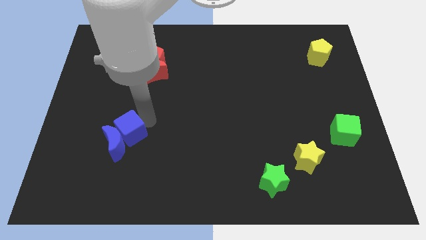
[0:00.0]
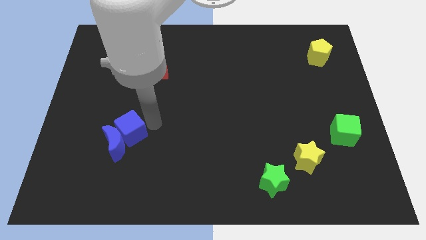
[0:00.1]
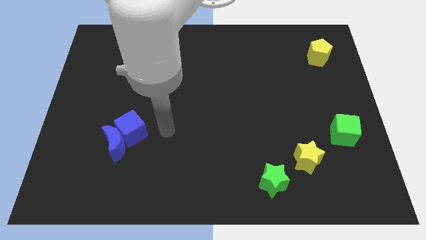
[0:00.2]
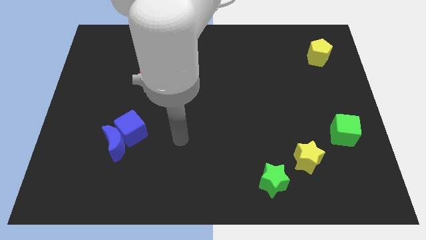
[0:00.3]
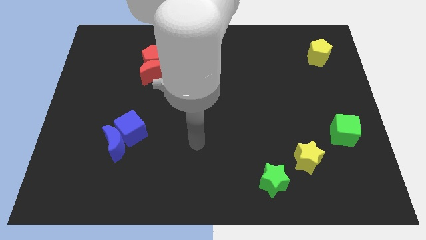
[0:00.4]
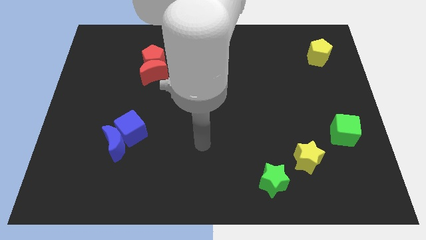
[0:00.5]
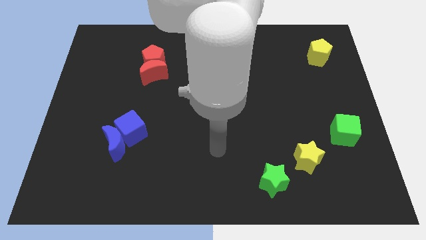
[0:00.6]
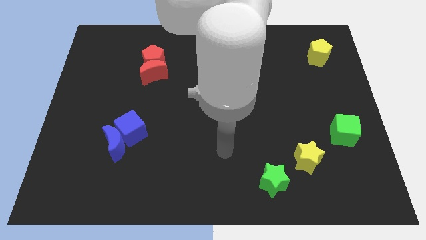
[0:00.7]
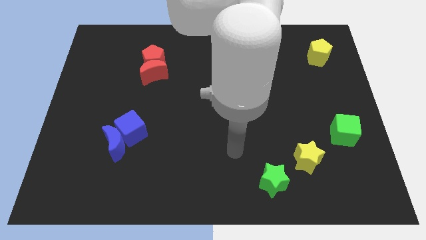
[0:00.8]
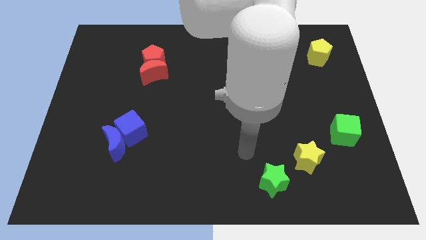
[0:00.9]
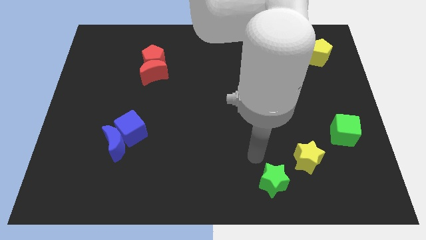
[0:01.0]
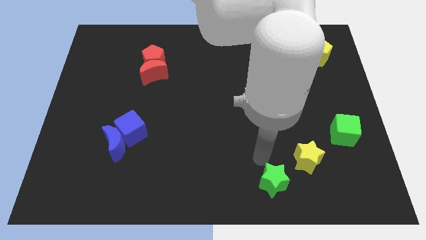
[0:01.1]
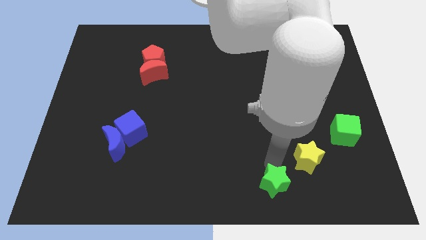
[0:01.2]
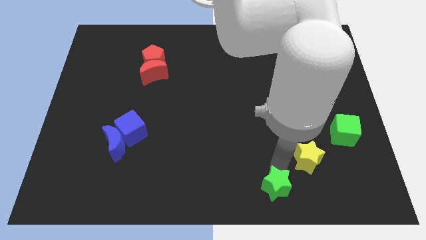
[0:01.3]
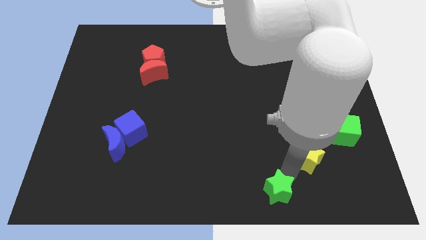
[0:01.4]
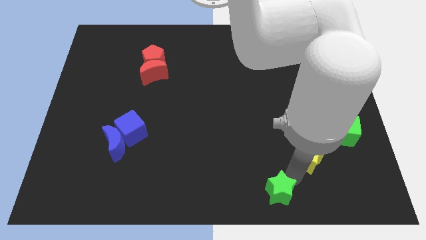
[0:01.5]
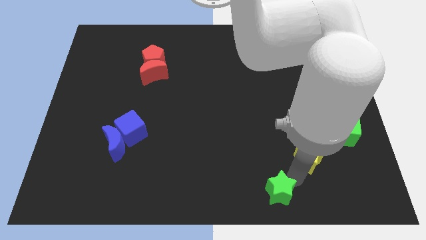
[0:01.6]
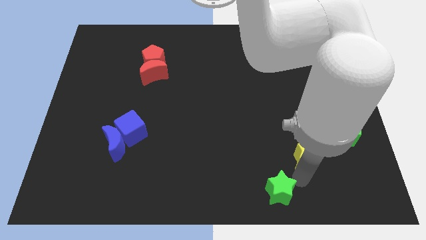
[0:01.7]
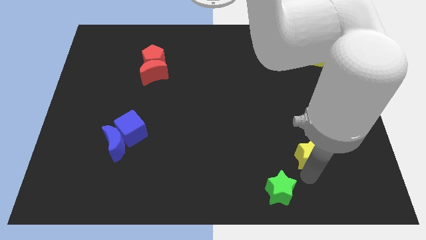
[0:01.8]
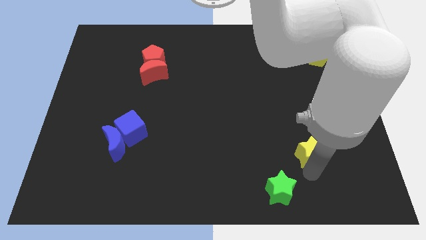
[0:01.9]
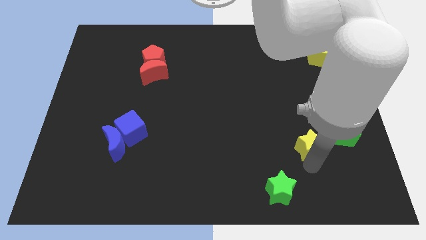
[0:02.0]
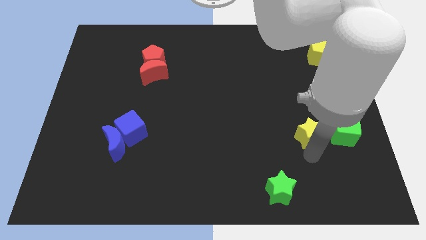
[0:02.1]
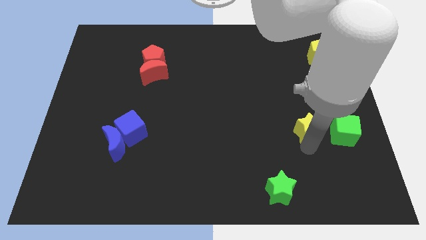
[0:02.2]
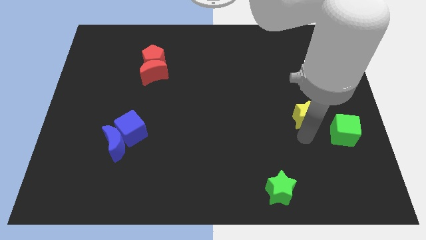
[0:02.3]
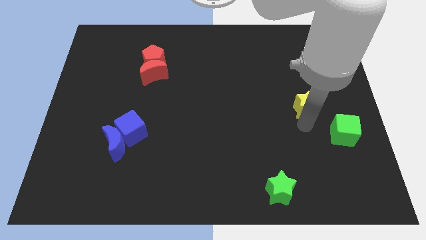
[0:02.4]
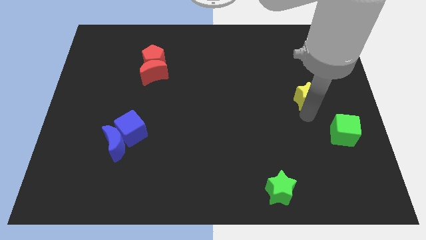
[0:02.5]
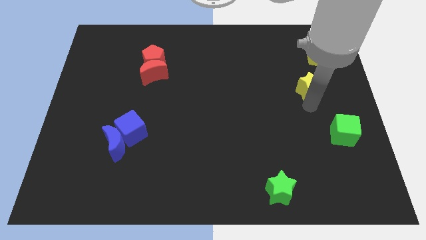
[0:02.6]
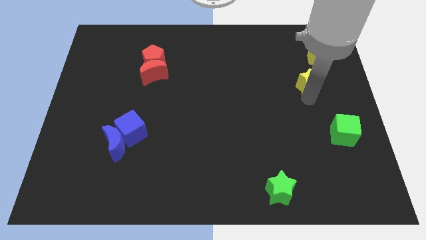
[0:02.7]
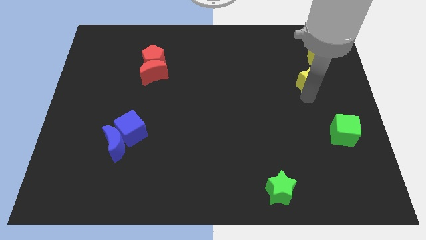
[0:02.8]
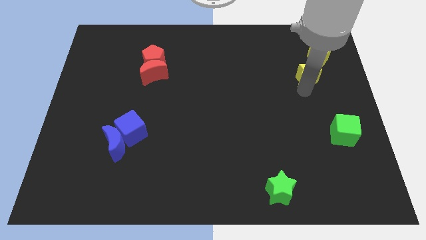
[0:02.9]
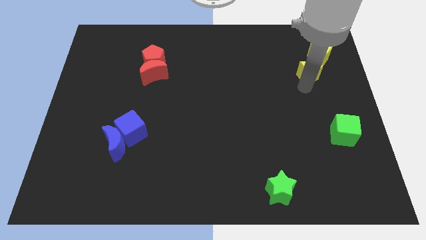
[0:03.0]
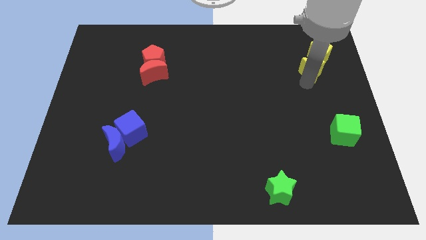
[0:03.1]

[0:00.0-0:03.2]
move yellow star away from the green star

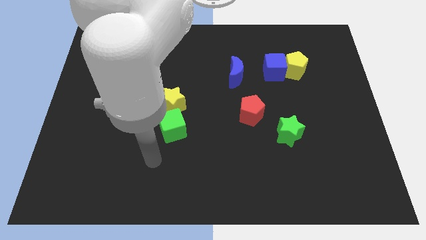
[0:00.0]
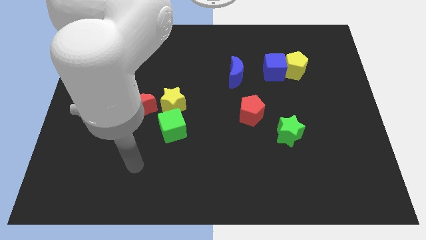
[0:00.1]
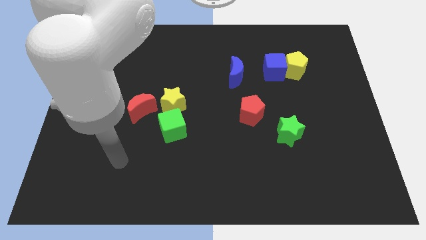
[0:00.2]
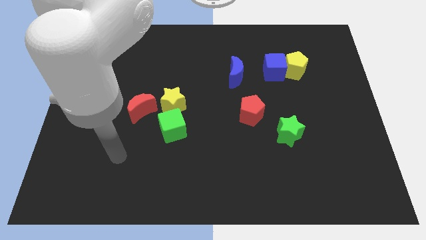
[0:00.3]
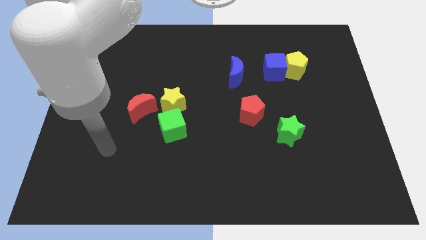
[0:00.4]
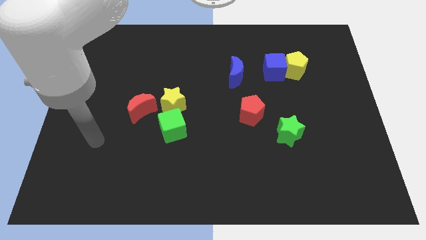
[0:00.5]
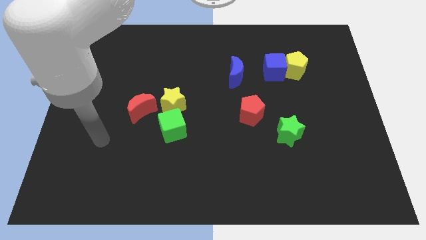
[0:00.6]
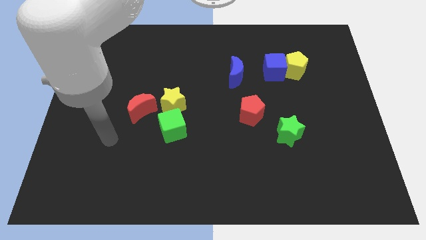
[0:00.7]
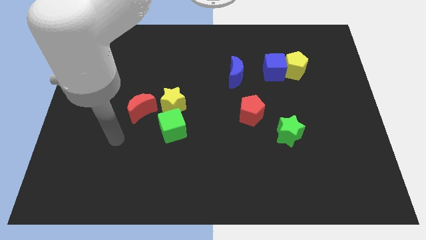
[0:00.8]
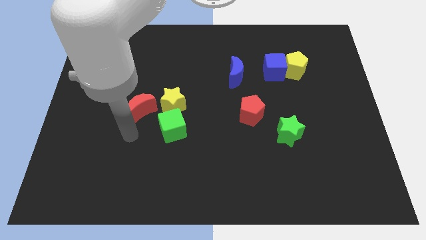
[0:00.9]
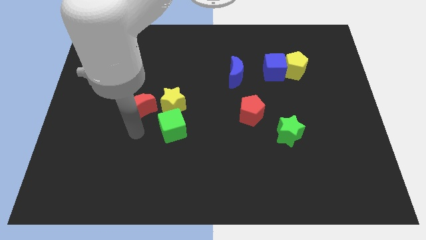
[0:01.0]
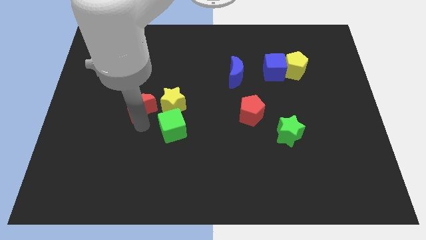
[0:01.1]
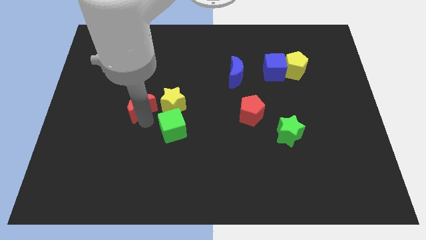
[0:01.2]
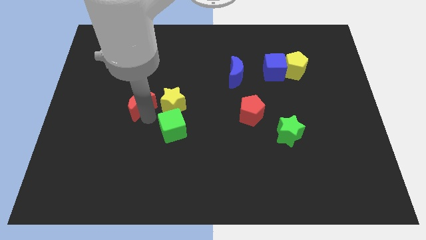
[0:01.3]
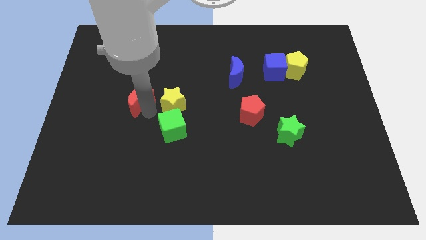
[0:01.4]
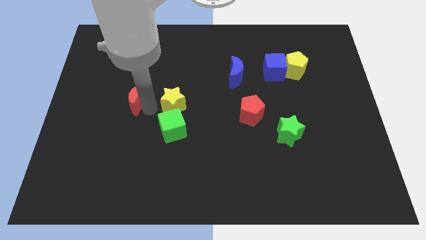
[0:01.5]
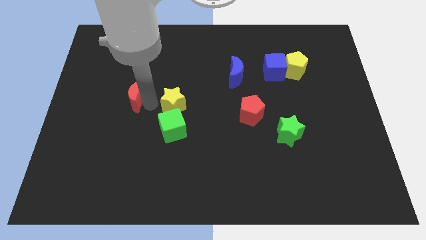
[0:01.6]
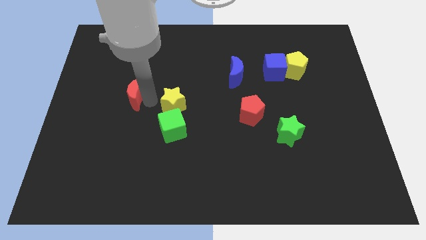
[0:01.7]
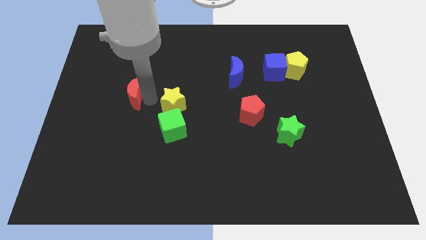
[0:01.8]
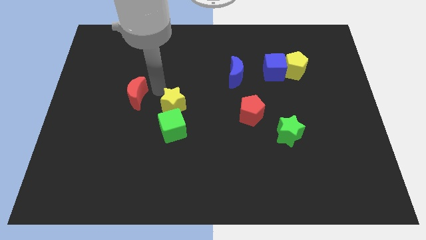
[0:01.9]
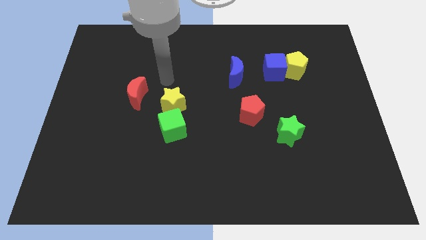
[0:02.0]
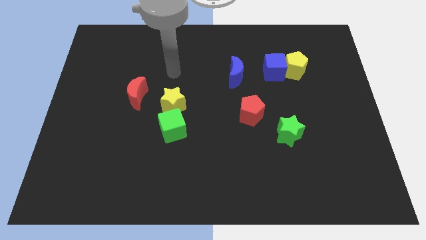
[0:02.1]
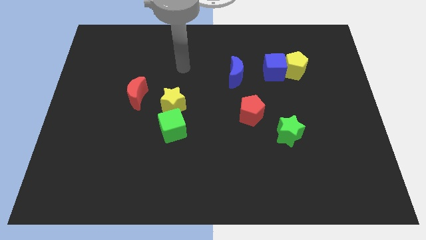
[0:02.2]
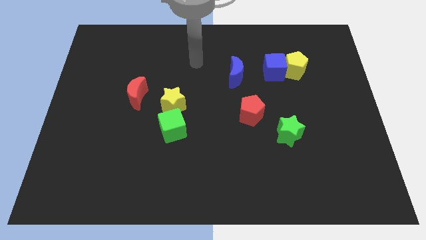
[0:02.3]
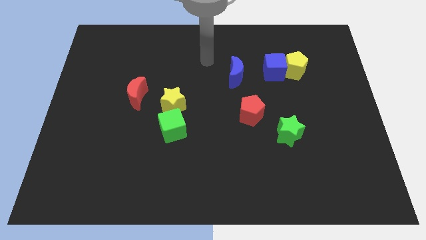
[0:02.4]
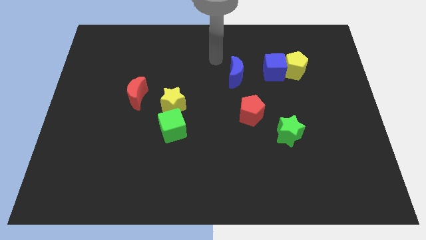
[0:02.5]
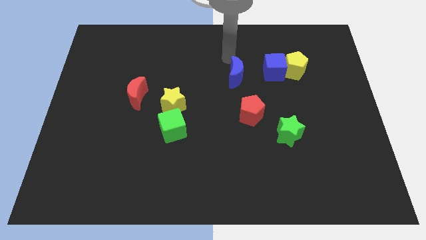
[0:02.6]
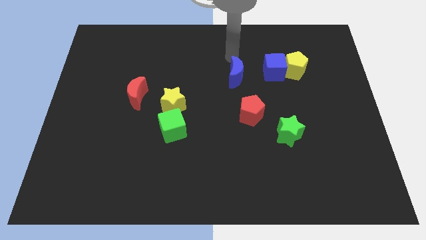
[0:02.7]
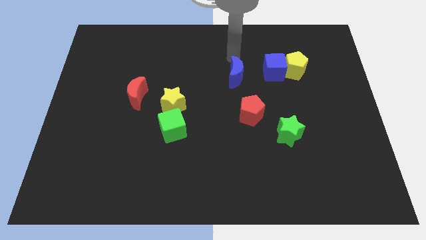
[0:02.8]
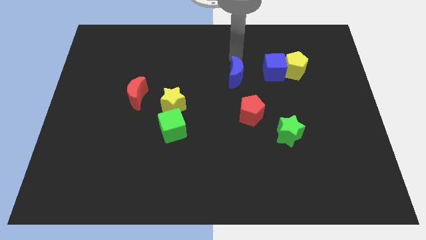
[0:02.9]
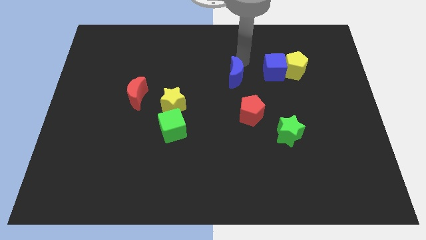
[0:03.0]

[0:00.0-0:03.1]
move the red crescent slightly away from the yellow star

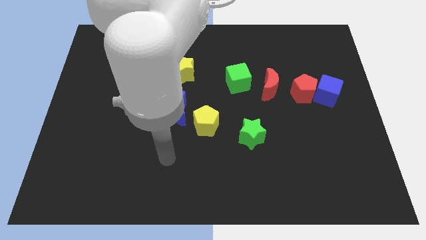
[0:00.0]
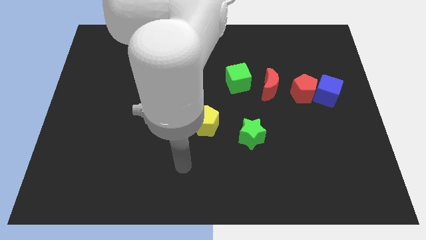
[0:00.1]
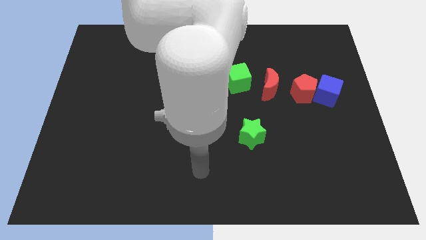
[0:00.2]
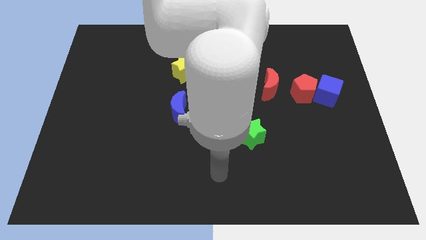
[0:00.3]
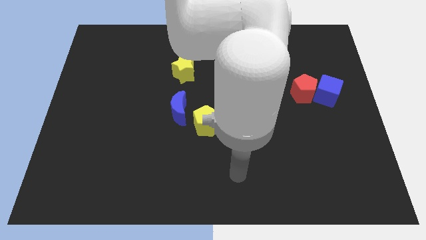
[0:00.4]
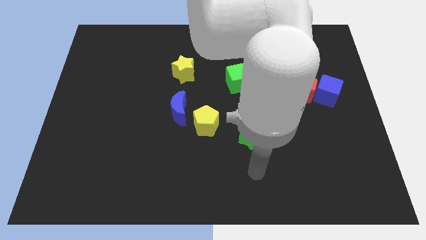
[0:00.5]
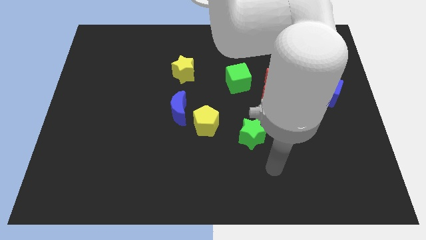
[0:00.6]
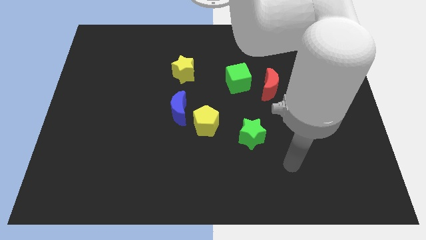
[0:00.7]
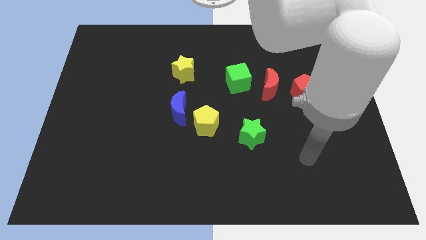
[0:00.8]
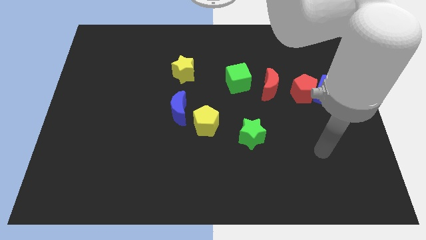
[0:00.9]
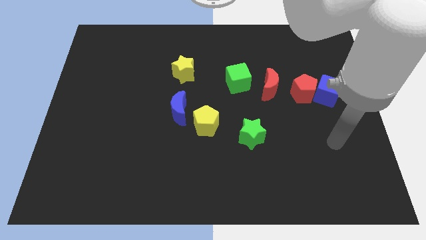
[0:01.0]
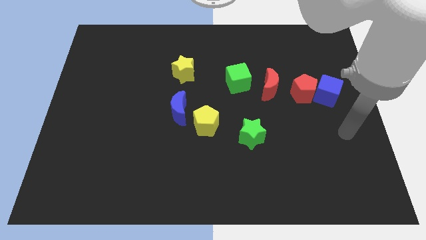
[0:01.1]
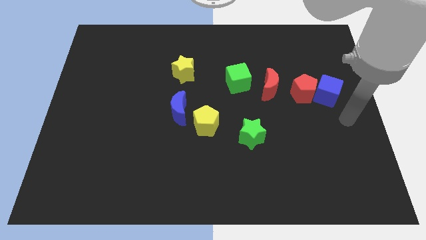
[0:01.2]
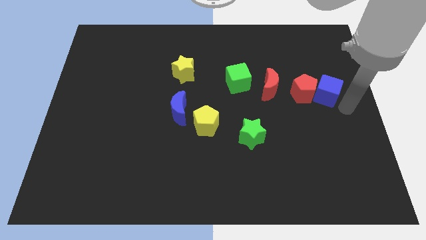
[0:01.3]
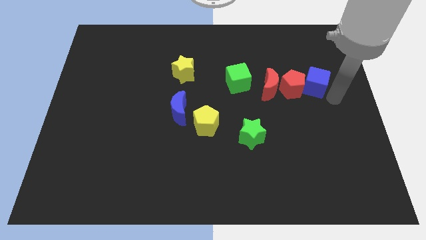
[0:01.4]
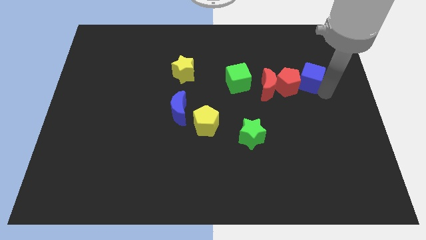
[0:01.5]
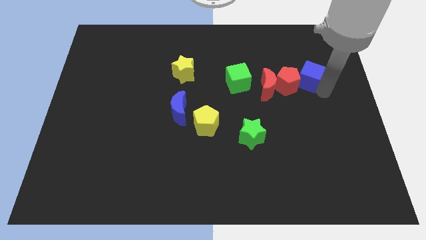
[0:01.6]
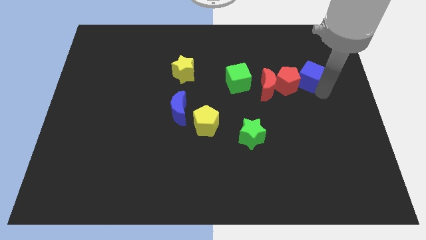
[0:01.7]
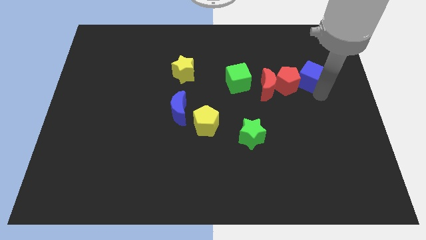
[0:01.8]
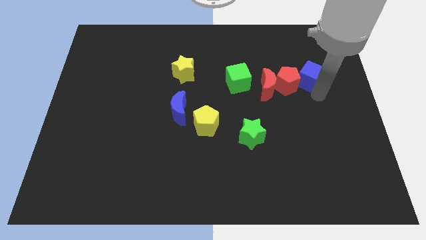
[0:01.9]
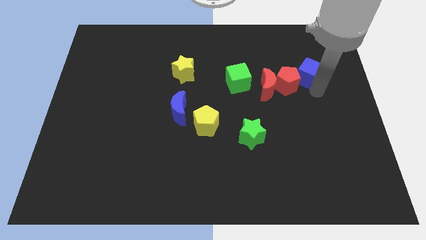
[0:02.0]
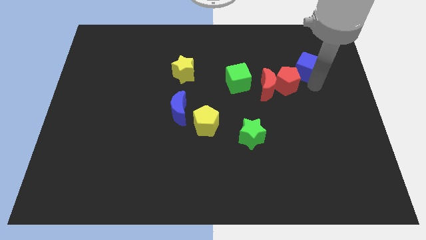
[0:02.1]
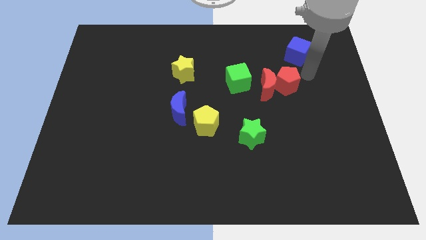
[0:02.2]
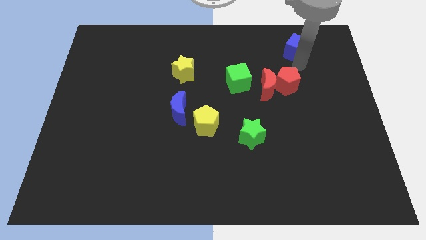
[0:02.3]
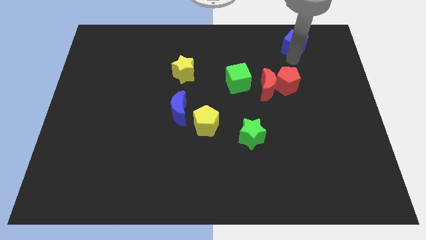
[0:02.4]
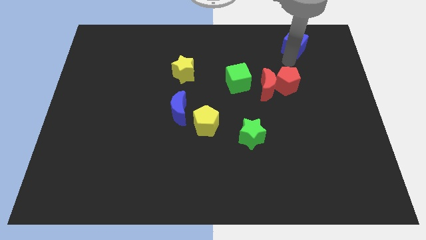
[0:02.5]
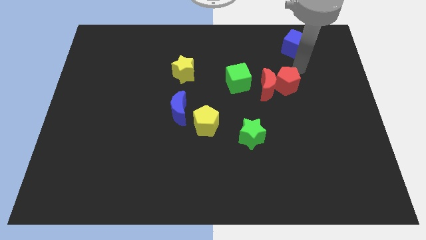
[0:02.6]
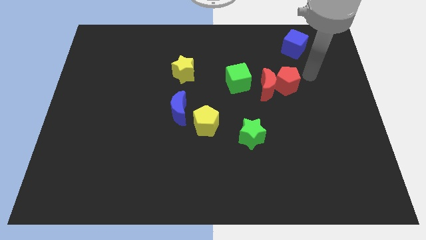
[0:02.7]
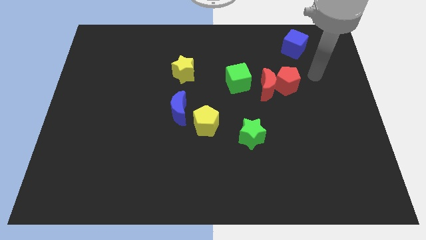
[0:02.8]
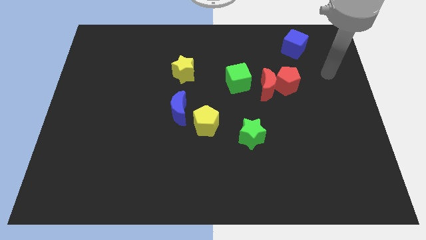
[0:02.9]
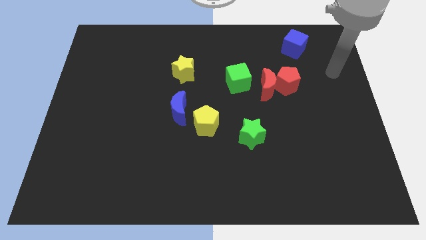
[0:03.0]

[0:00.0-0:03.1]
move the blue cube away from the right side of the red pentagon
